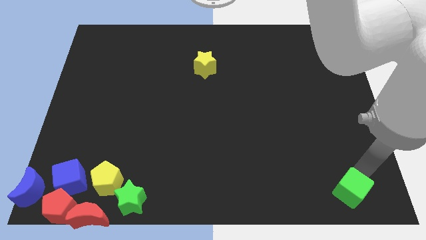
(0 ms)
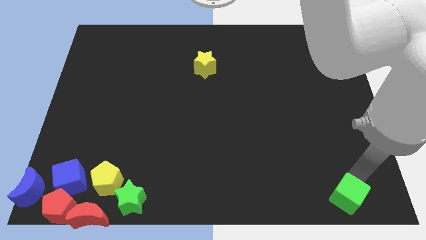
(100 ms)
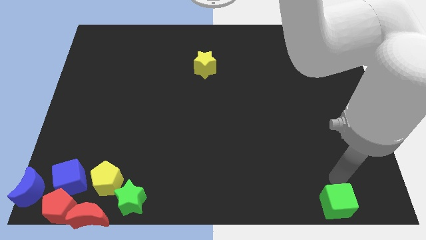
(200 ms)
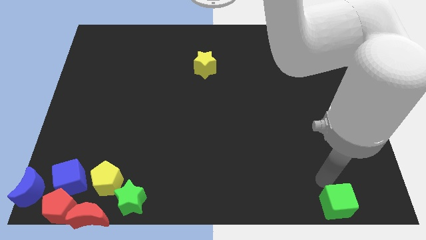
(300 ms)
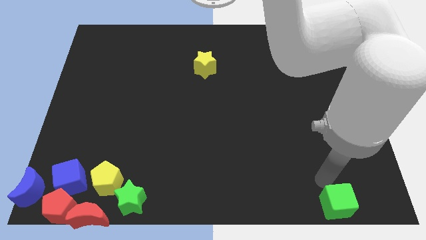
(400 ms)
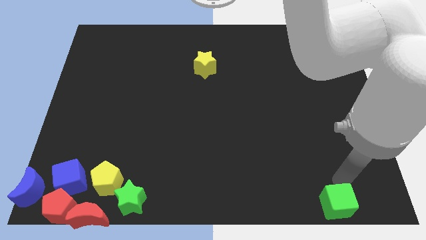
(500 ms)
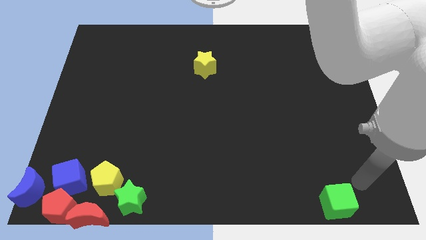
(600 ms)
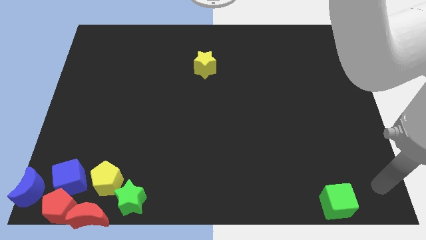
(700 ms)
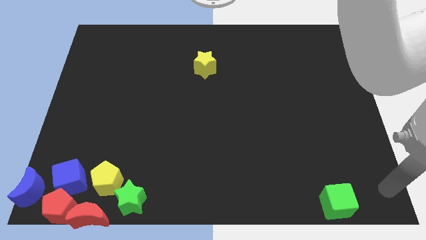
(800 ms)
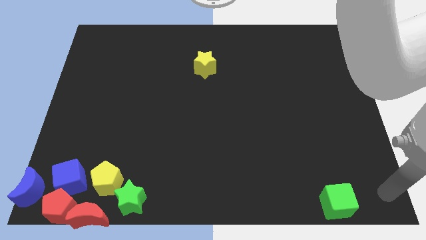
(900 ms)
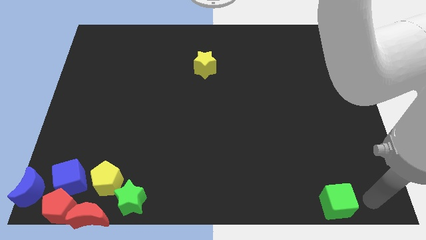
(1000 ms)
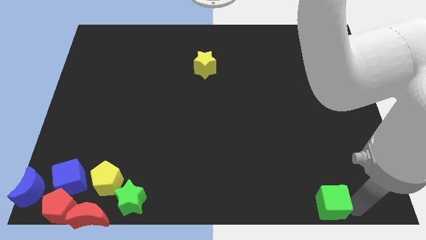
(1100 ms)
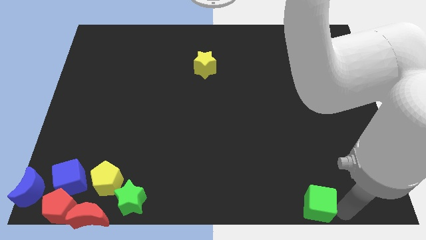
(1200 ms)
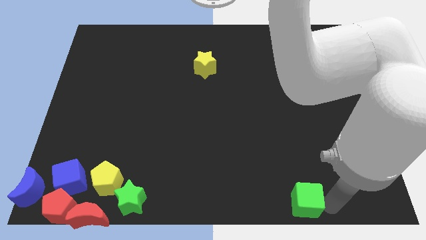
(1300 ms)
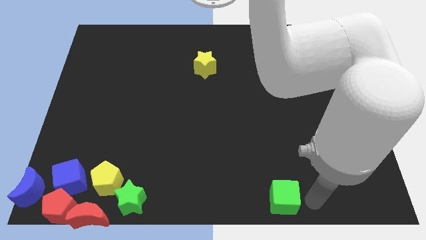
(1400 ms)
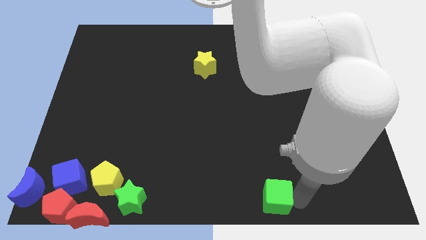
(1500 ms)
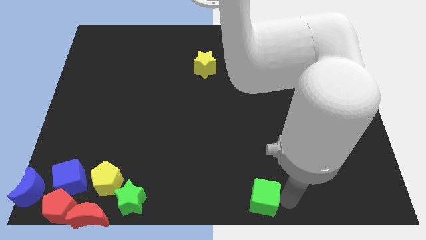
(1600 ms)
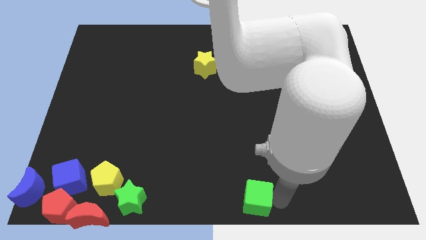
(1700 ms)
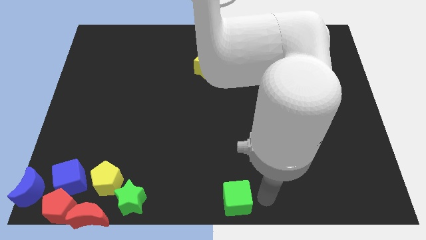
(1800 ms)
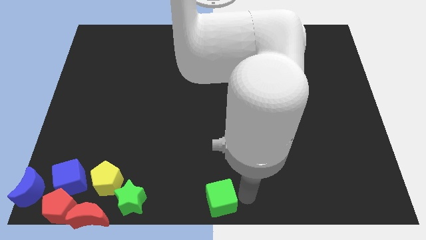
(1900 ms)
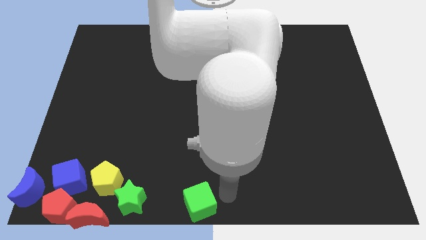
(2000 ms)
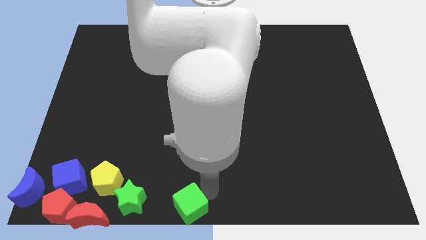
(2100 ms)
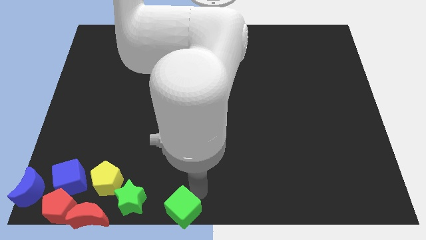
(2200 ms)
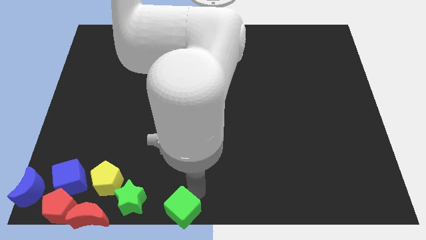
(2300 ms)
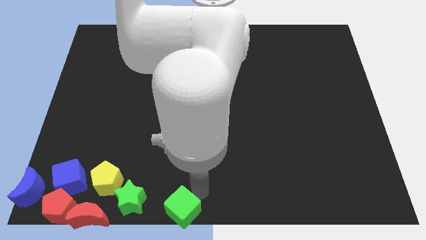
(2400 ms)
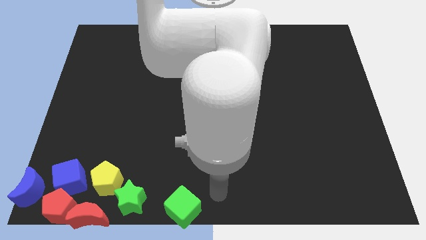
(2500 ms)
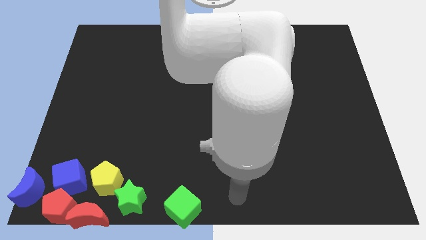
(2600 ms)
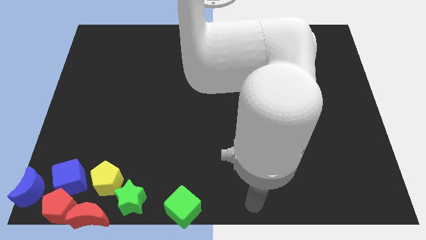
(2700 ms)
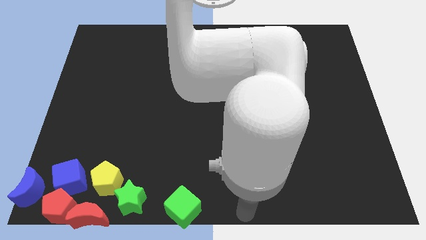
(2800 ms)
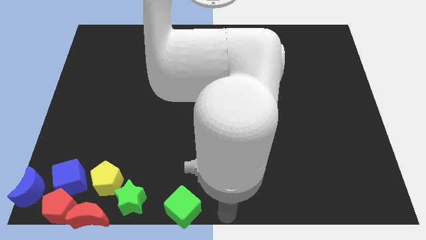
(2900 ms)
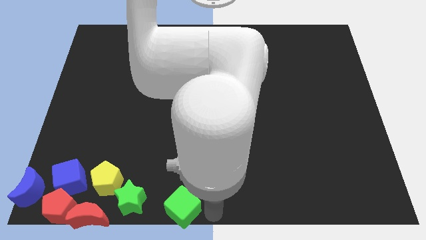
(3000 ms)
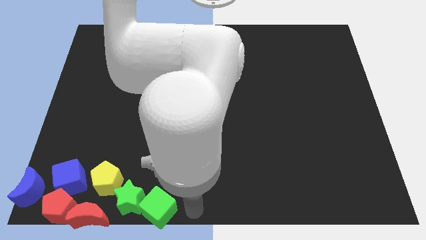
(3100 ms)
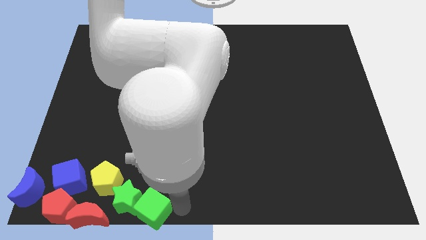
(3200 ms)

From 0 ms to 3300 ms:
drag the green cube into the right side of the green star

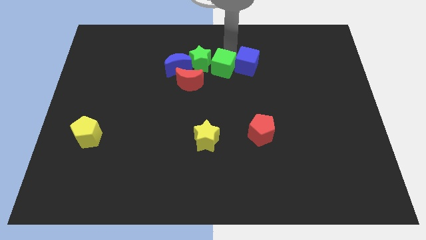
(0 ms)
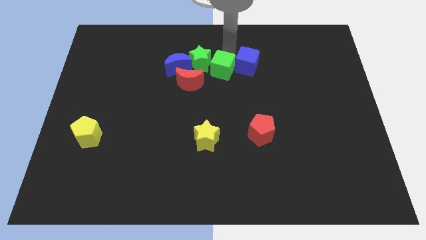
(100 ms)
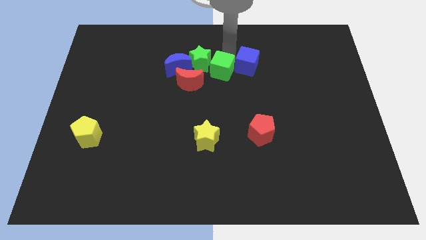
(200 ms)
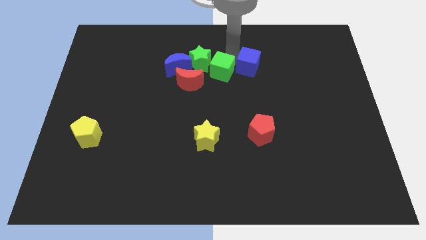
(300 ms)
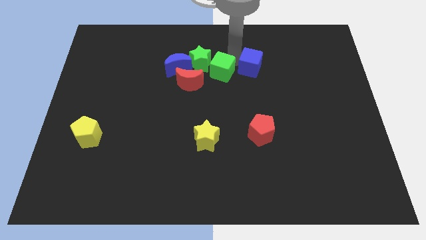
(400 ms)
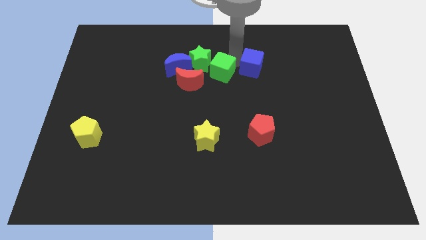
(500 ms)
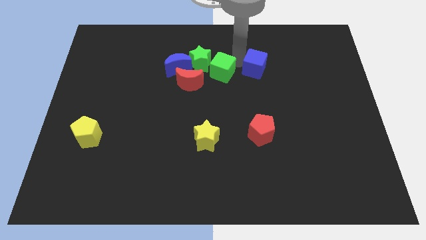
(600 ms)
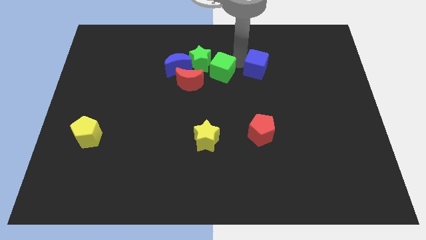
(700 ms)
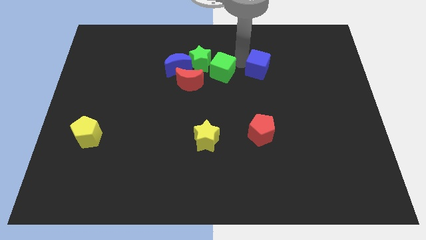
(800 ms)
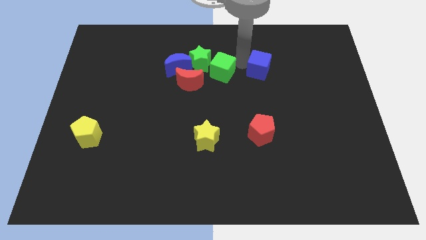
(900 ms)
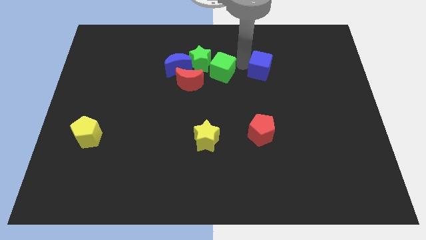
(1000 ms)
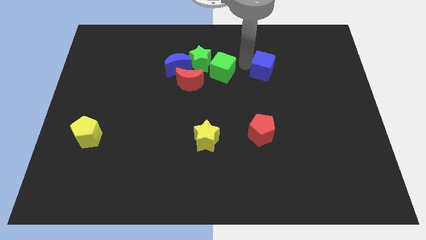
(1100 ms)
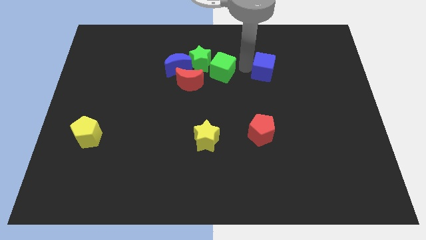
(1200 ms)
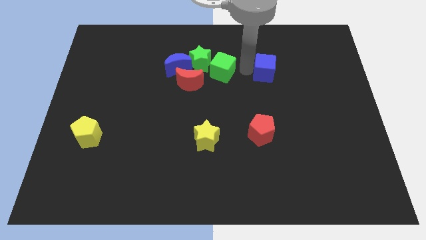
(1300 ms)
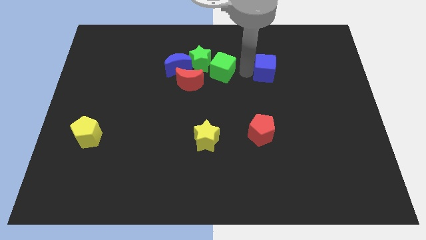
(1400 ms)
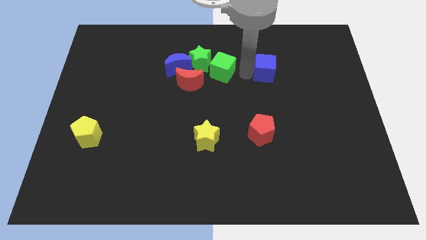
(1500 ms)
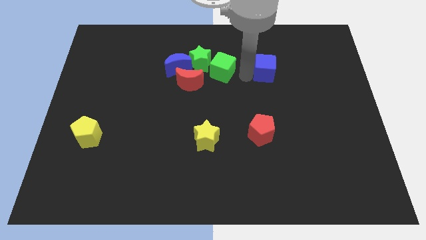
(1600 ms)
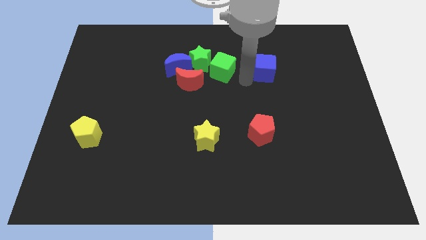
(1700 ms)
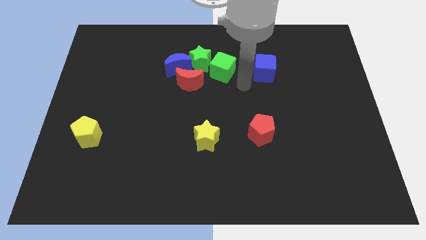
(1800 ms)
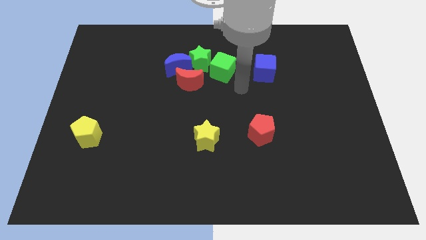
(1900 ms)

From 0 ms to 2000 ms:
separate the green and blue cube

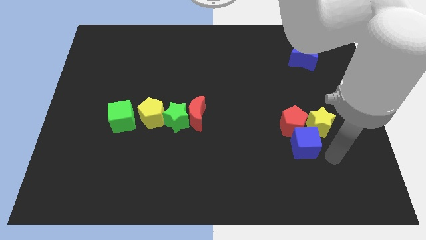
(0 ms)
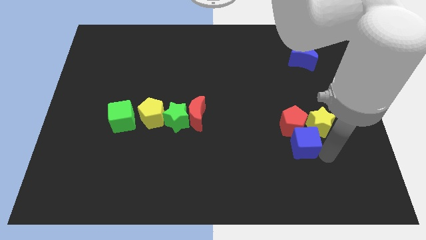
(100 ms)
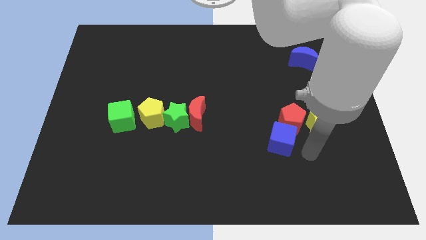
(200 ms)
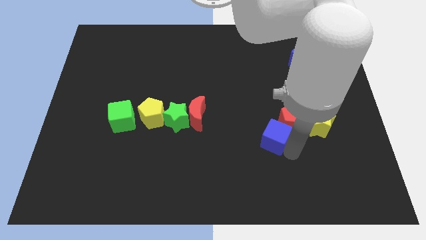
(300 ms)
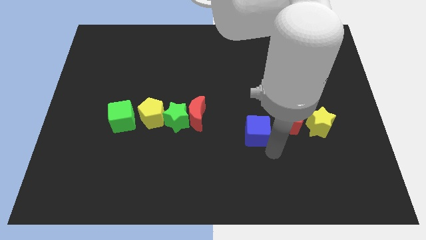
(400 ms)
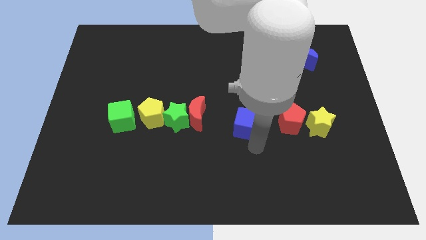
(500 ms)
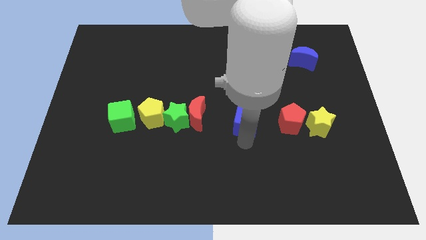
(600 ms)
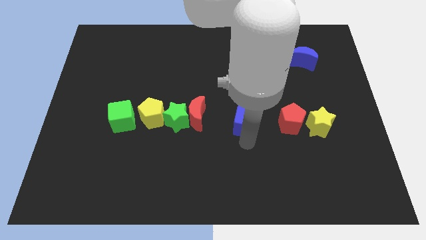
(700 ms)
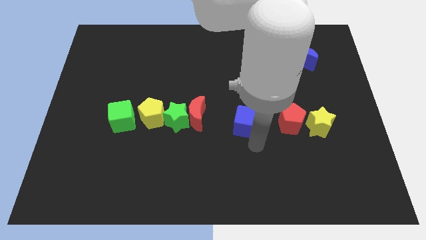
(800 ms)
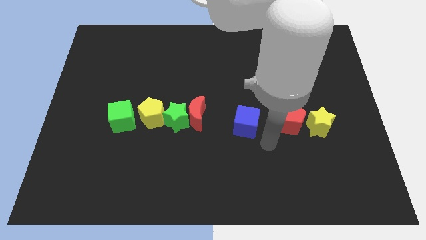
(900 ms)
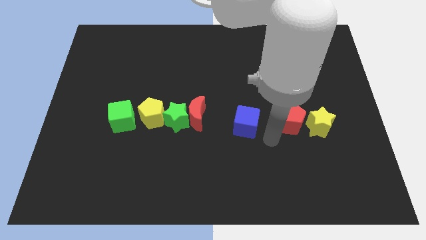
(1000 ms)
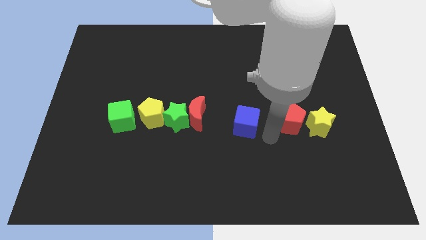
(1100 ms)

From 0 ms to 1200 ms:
move the blue cube left to the red pentagon

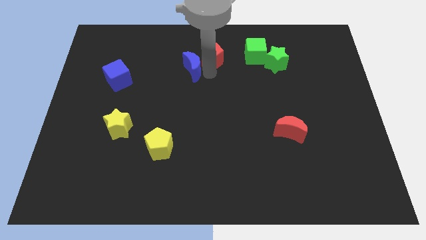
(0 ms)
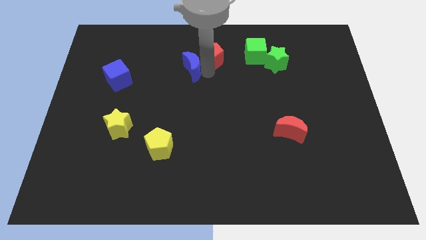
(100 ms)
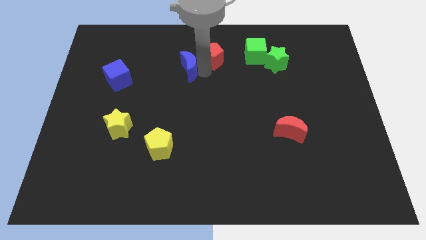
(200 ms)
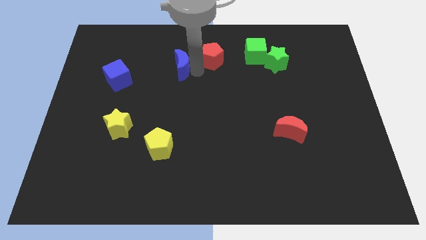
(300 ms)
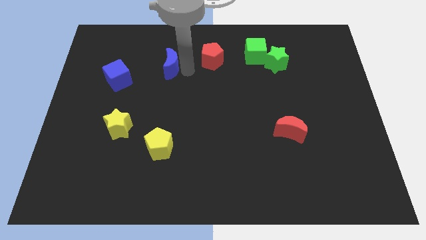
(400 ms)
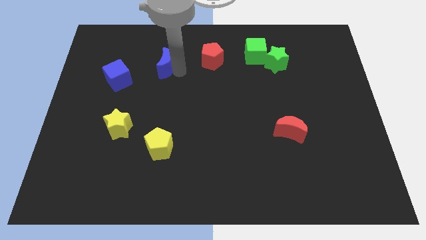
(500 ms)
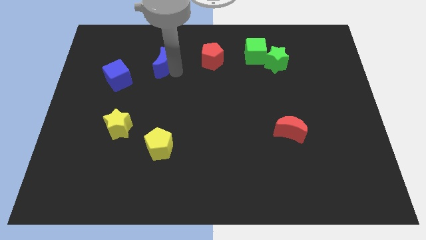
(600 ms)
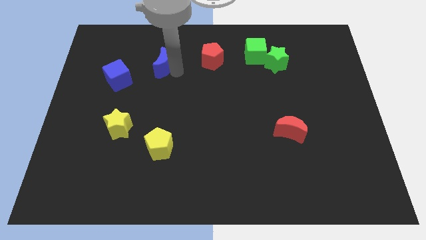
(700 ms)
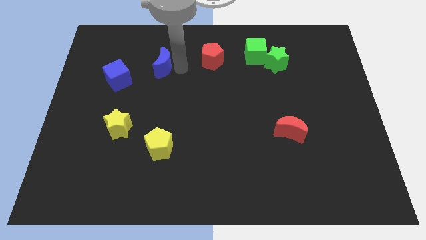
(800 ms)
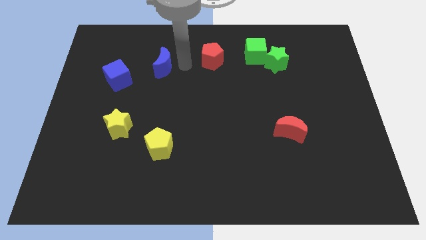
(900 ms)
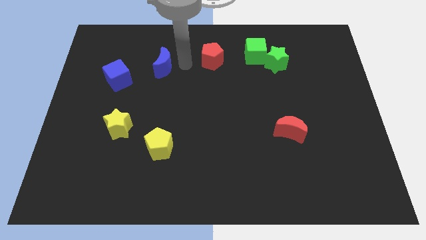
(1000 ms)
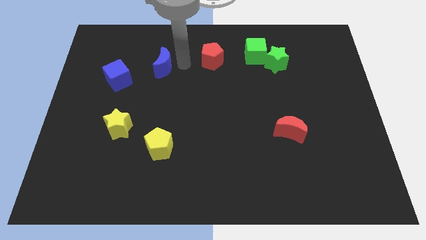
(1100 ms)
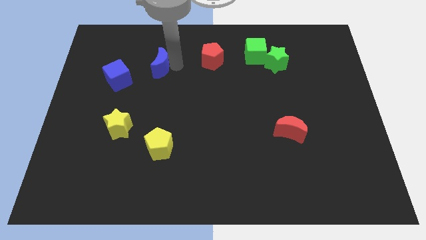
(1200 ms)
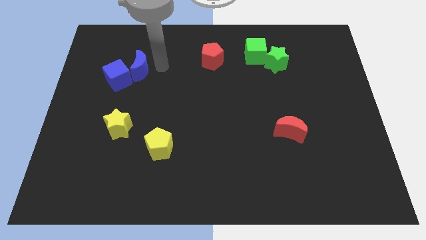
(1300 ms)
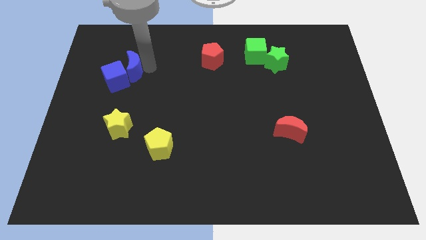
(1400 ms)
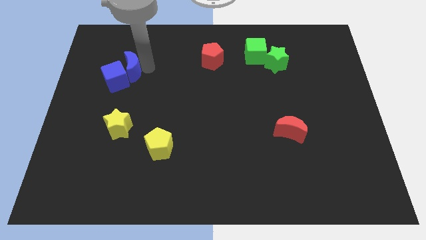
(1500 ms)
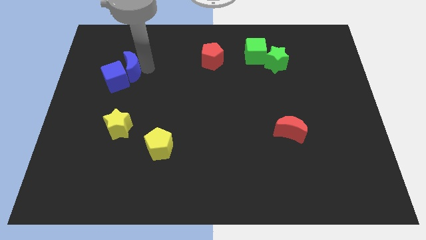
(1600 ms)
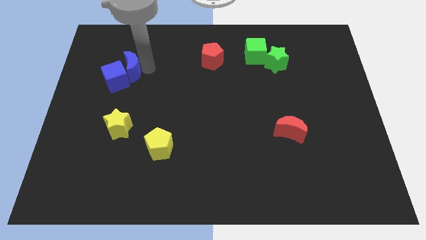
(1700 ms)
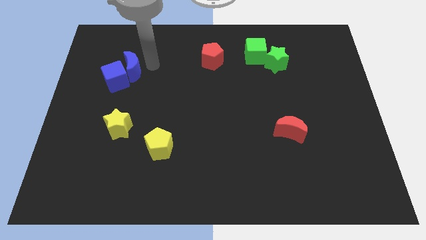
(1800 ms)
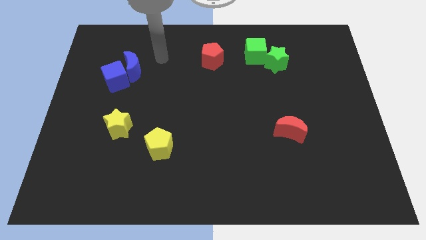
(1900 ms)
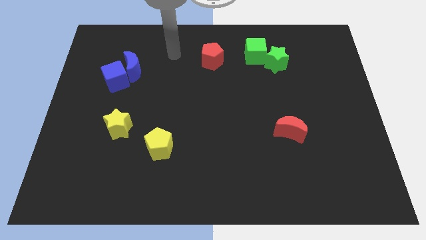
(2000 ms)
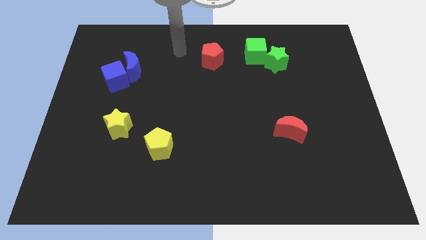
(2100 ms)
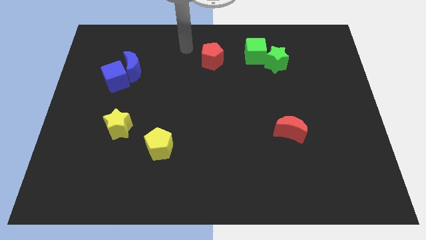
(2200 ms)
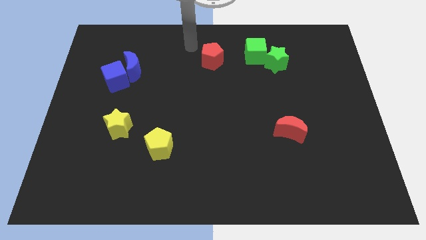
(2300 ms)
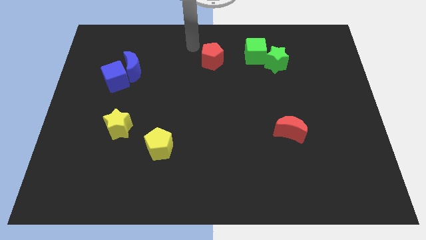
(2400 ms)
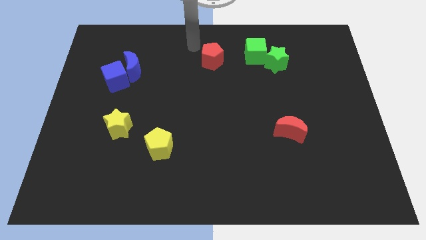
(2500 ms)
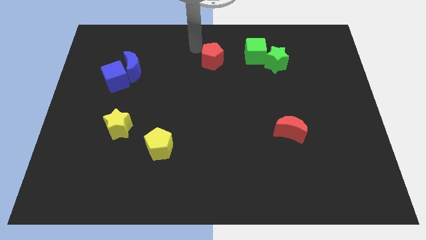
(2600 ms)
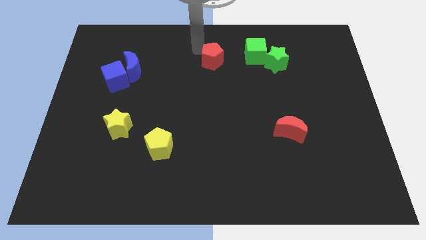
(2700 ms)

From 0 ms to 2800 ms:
move the blue moon into the blue cube
